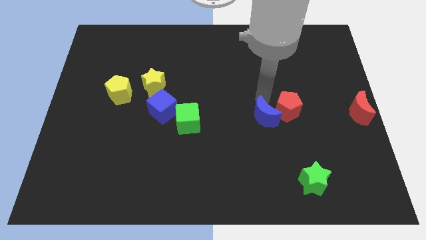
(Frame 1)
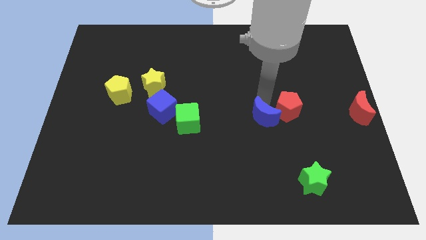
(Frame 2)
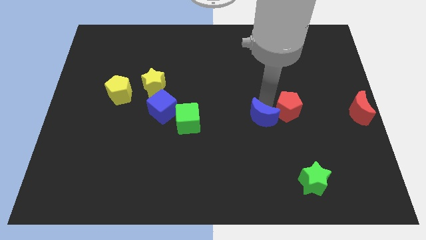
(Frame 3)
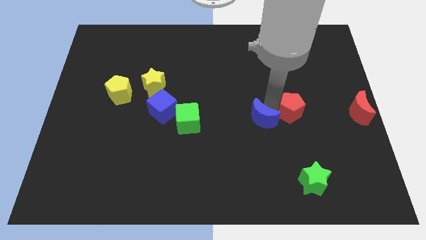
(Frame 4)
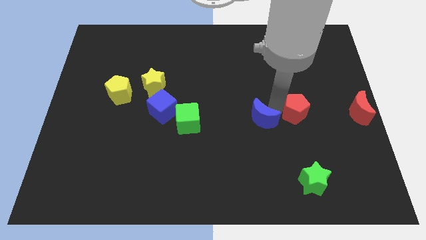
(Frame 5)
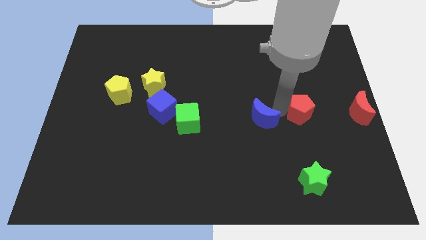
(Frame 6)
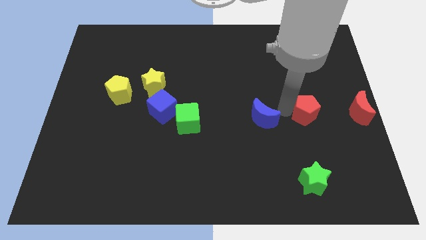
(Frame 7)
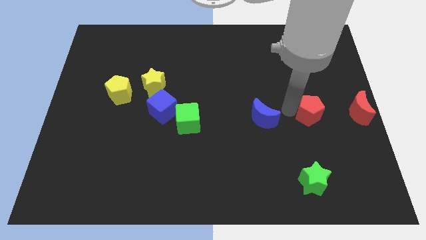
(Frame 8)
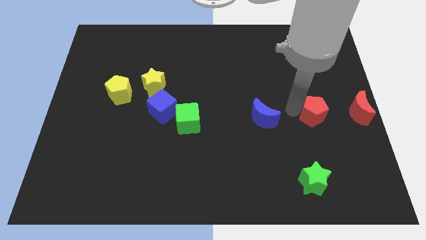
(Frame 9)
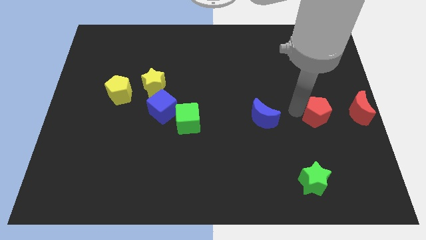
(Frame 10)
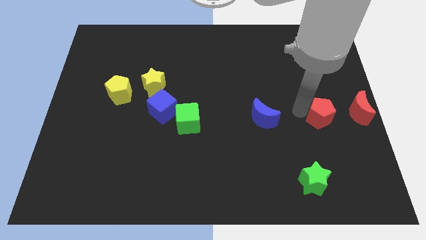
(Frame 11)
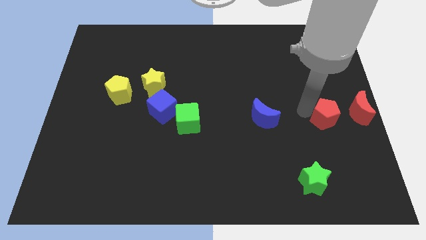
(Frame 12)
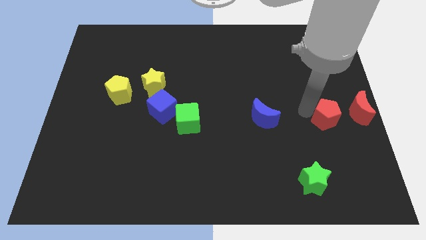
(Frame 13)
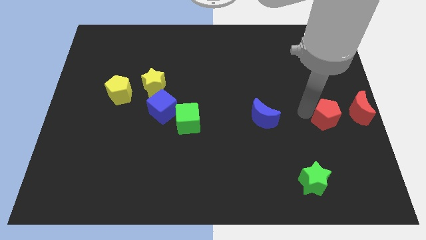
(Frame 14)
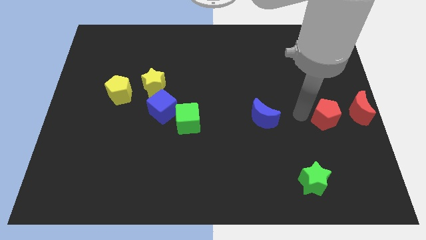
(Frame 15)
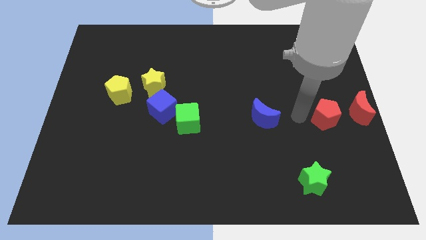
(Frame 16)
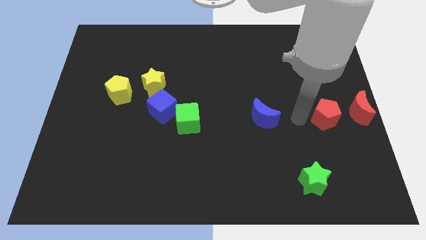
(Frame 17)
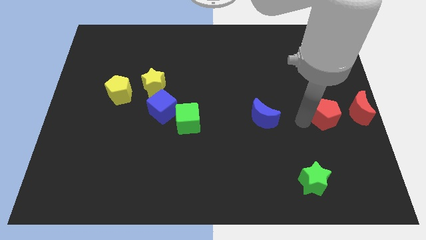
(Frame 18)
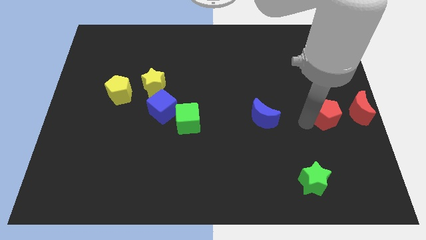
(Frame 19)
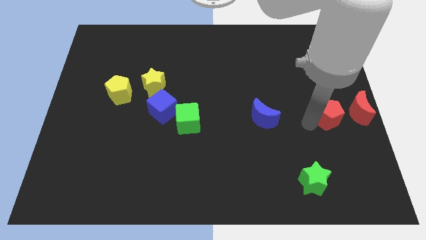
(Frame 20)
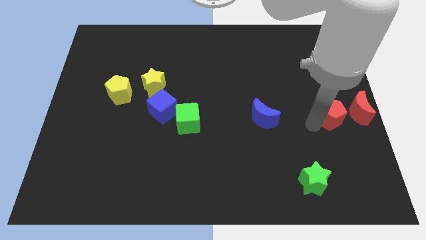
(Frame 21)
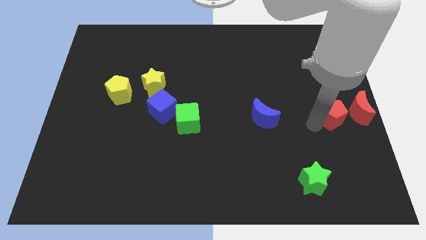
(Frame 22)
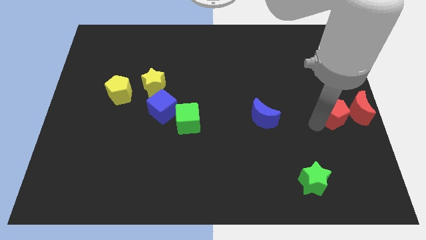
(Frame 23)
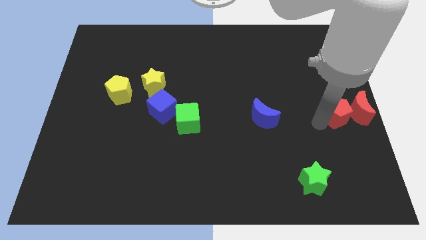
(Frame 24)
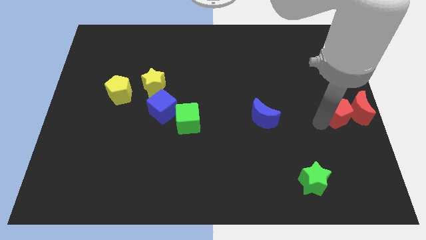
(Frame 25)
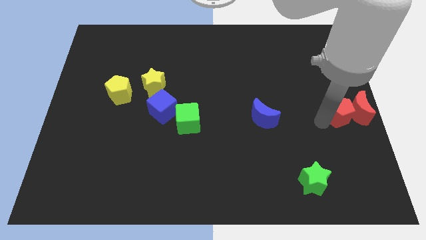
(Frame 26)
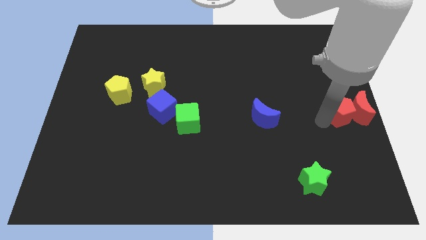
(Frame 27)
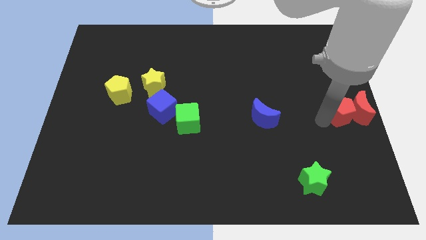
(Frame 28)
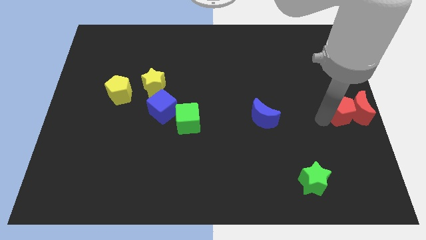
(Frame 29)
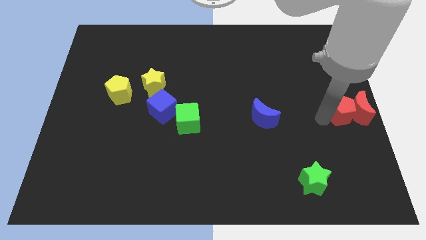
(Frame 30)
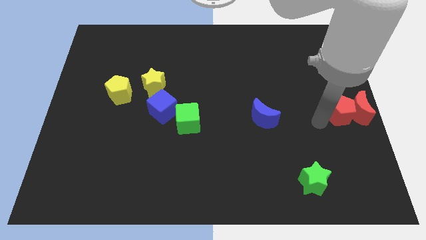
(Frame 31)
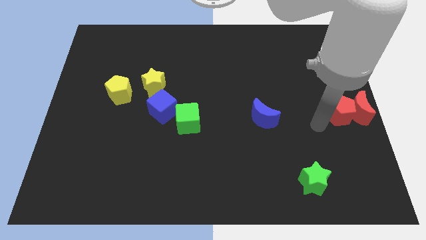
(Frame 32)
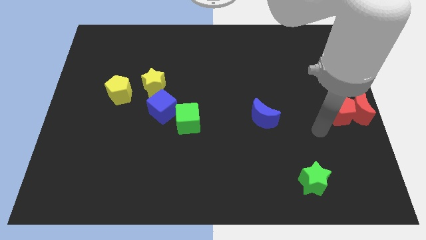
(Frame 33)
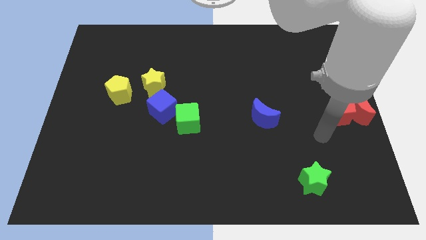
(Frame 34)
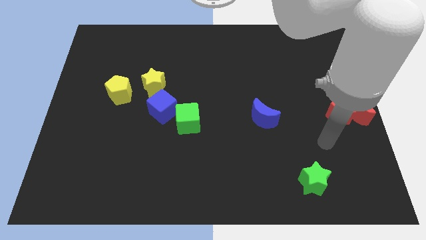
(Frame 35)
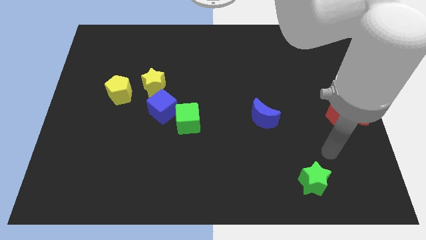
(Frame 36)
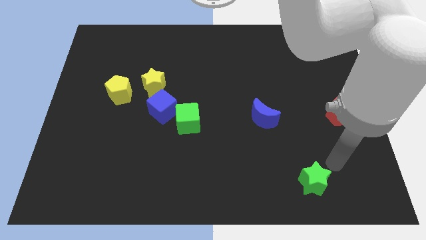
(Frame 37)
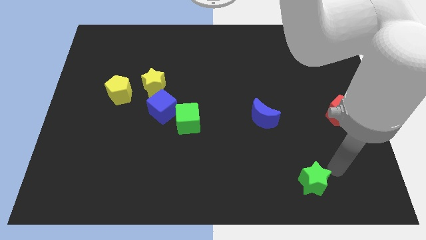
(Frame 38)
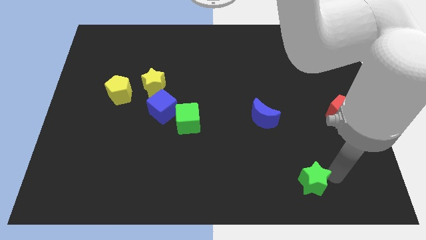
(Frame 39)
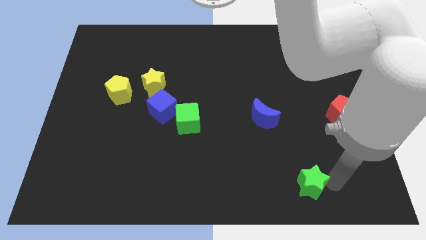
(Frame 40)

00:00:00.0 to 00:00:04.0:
place the red pentagon left side of red crescent

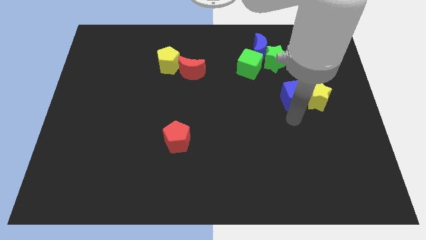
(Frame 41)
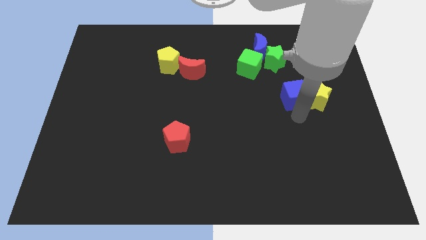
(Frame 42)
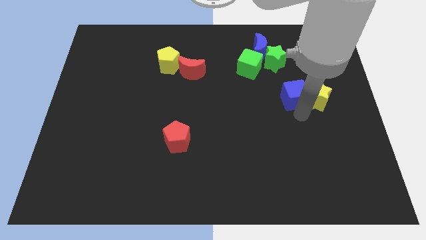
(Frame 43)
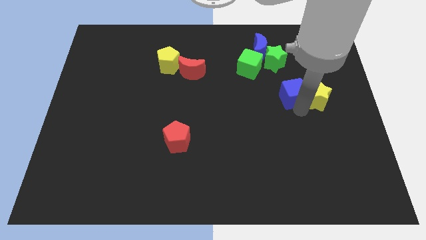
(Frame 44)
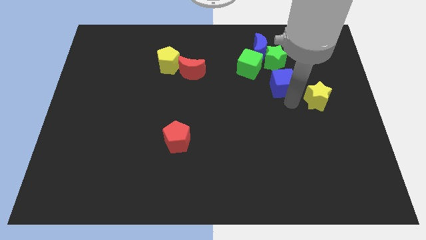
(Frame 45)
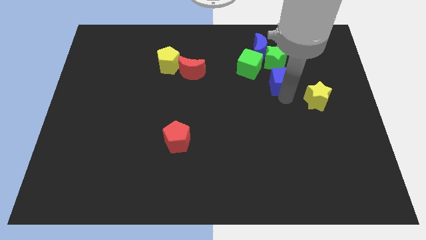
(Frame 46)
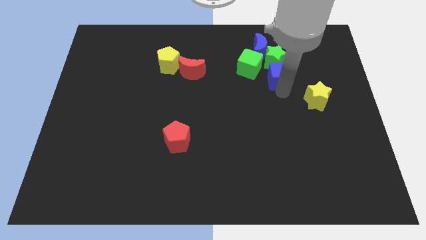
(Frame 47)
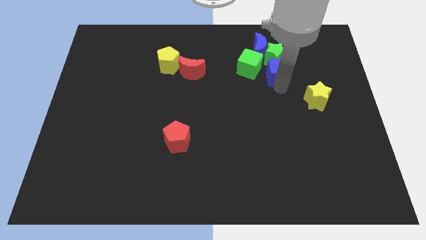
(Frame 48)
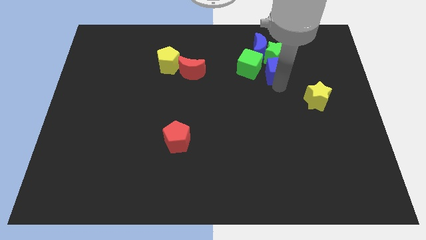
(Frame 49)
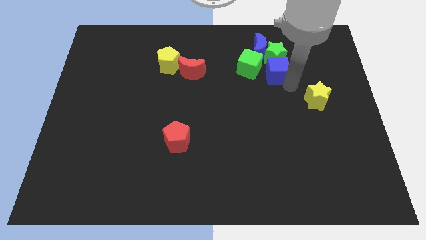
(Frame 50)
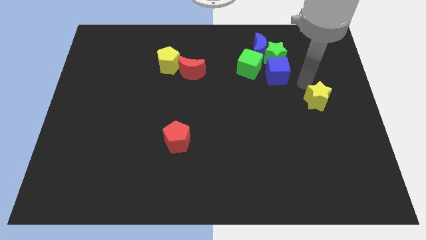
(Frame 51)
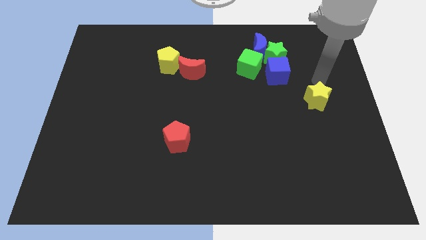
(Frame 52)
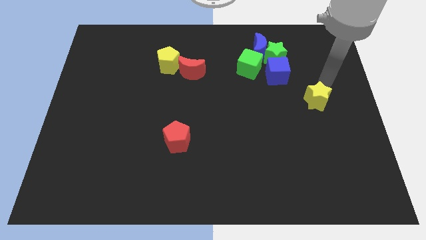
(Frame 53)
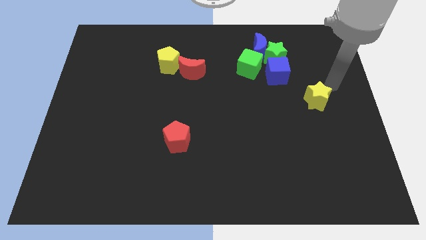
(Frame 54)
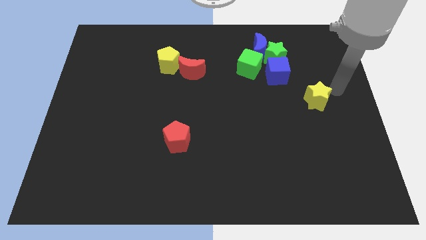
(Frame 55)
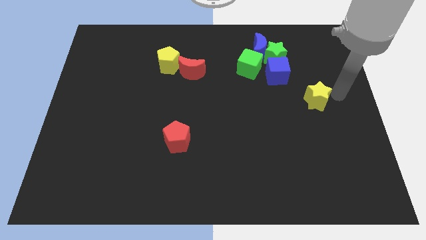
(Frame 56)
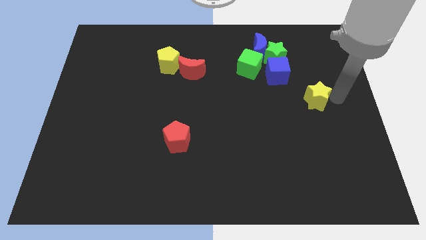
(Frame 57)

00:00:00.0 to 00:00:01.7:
push the blue cube into the green star

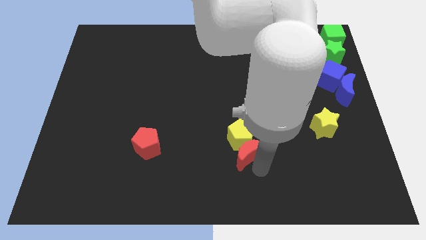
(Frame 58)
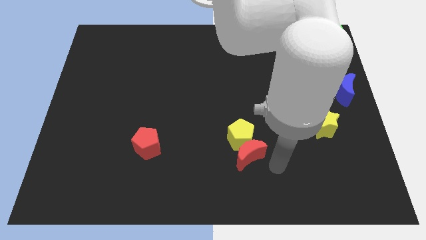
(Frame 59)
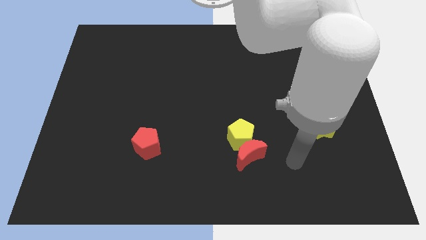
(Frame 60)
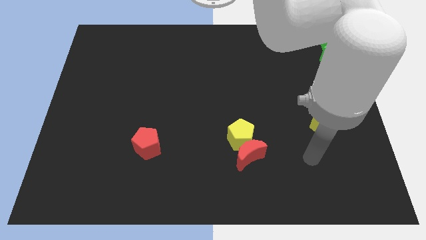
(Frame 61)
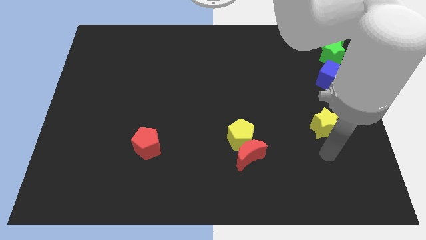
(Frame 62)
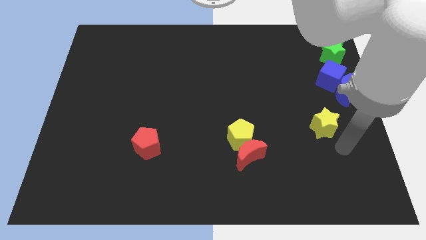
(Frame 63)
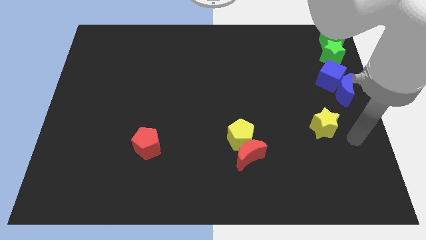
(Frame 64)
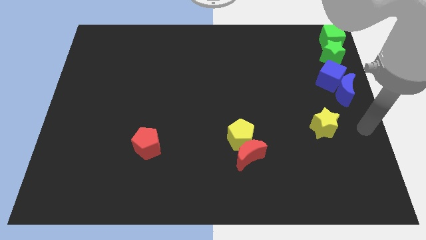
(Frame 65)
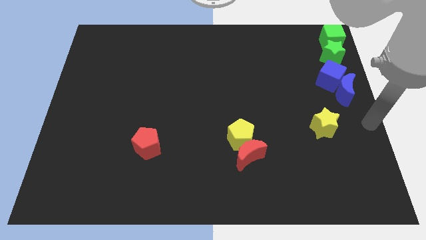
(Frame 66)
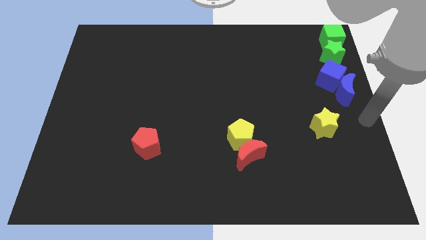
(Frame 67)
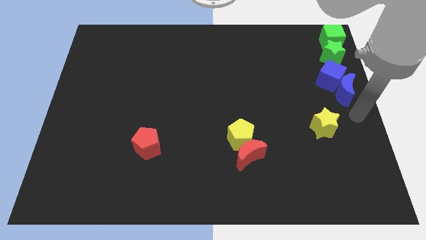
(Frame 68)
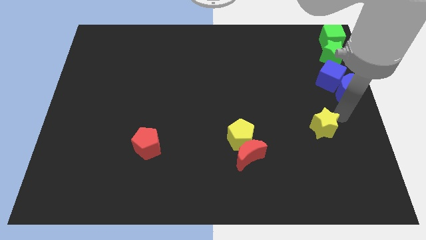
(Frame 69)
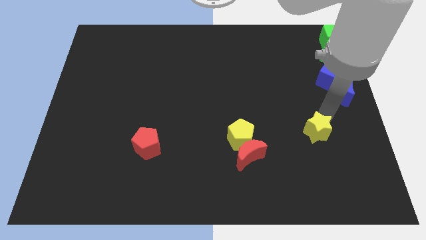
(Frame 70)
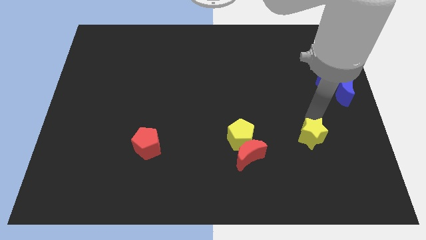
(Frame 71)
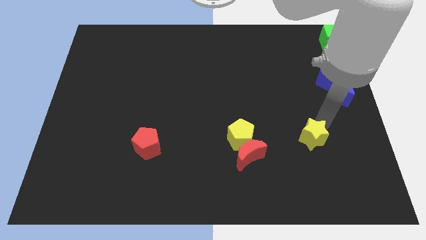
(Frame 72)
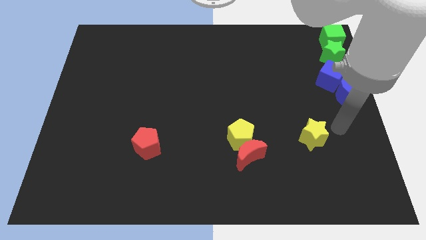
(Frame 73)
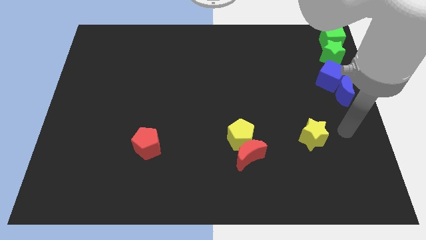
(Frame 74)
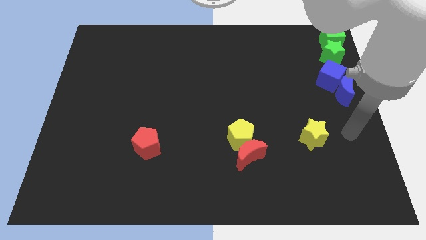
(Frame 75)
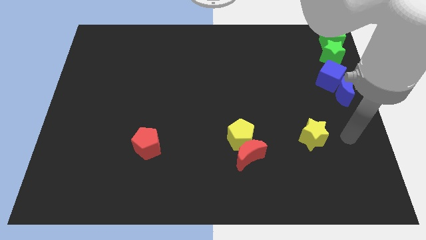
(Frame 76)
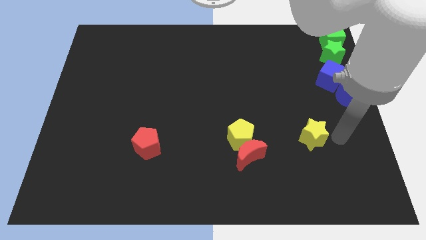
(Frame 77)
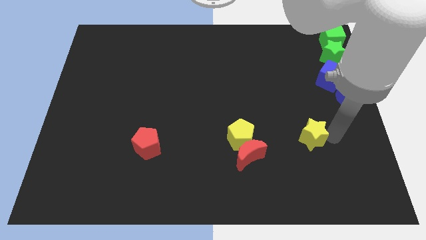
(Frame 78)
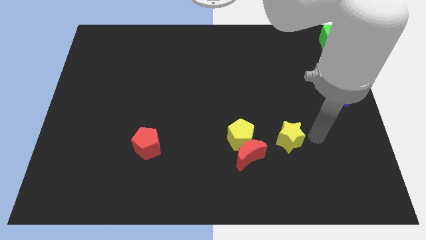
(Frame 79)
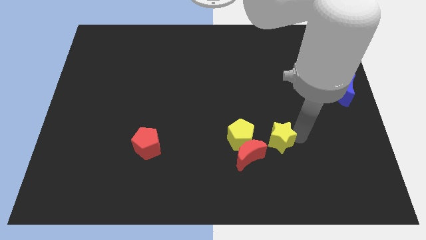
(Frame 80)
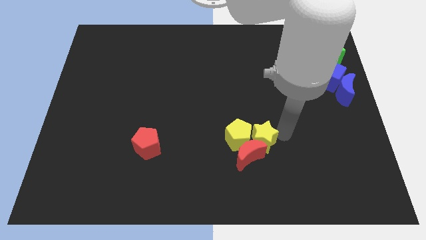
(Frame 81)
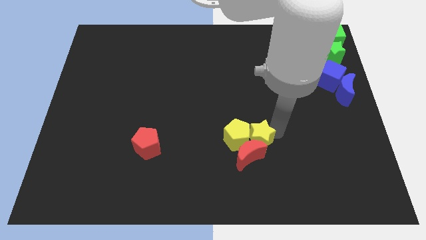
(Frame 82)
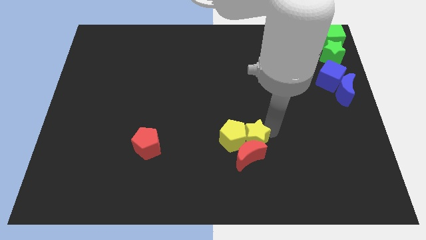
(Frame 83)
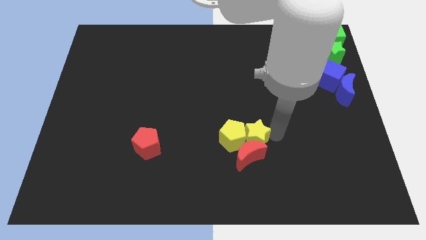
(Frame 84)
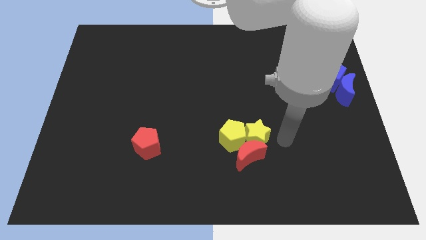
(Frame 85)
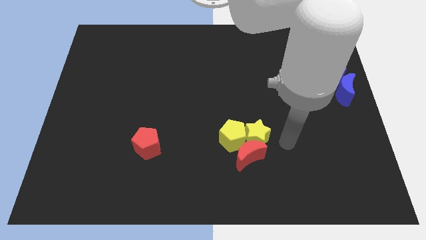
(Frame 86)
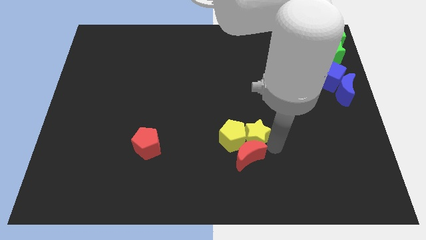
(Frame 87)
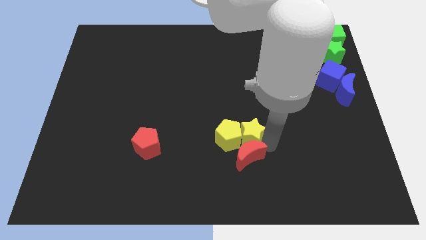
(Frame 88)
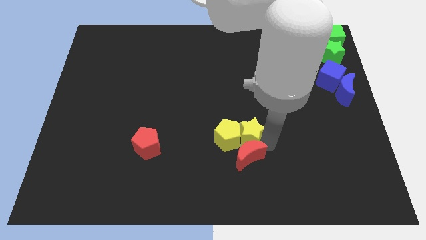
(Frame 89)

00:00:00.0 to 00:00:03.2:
push the yellow star to the right side of the yellow pentagon
